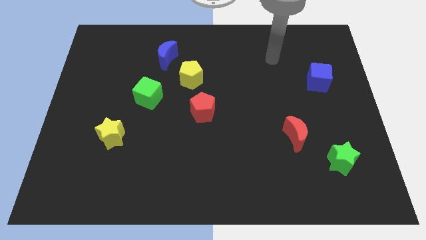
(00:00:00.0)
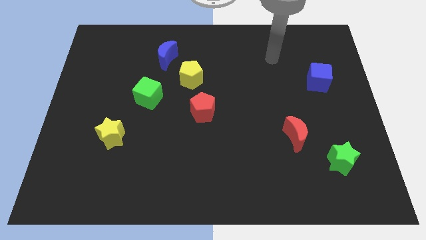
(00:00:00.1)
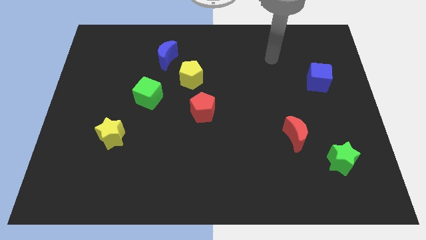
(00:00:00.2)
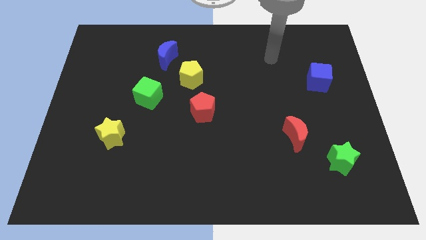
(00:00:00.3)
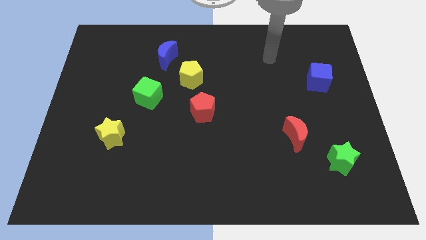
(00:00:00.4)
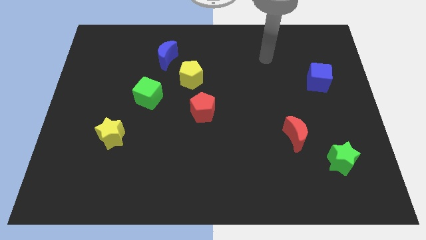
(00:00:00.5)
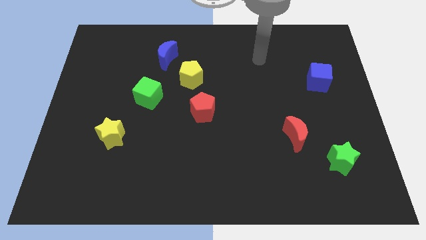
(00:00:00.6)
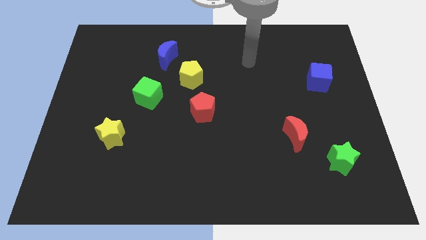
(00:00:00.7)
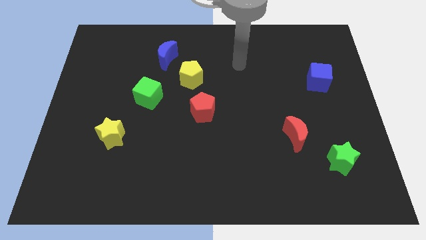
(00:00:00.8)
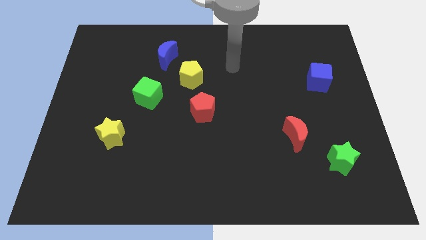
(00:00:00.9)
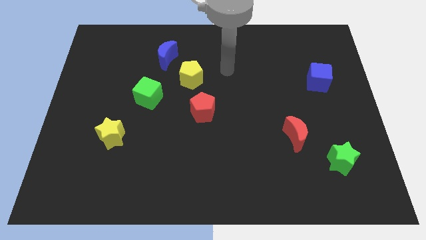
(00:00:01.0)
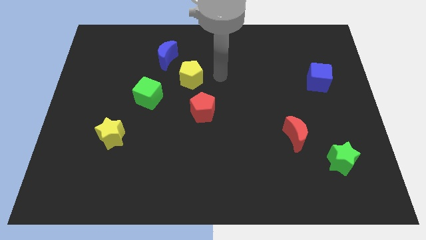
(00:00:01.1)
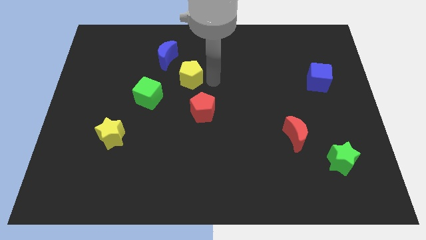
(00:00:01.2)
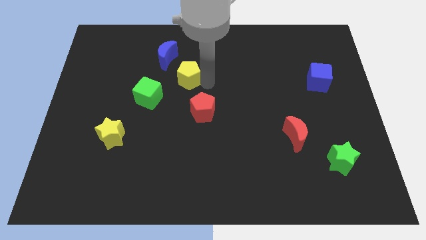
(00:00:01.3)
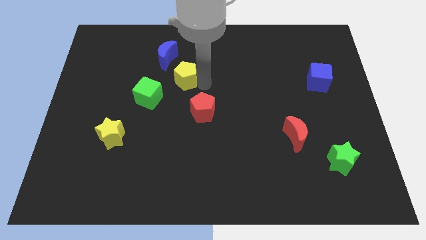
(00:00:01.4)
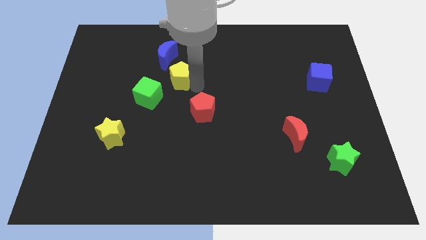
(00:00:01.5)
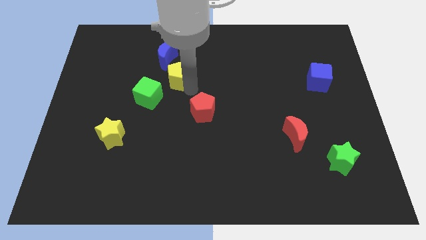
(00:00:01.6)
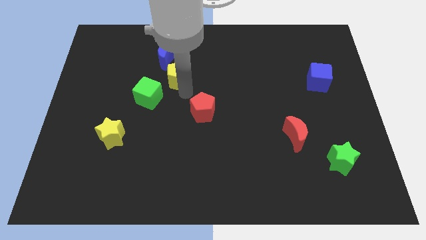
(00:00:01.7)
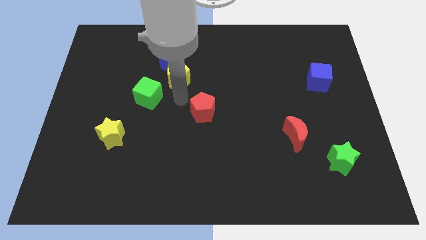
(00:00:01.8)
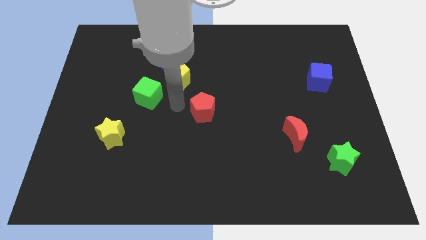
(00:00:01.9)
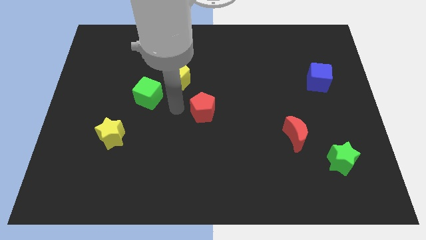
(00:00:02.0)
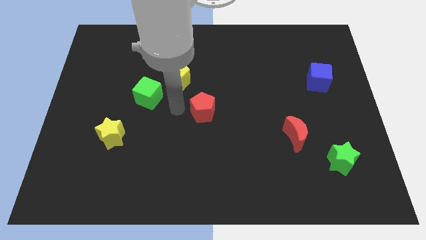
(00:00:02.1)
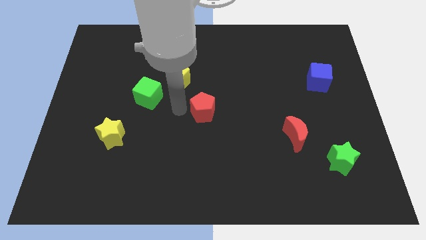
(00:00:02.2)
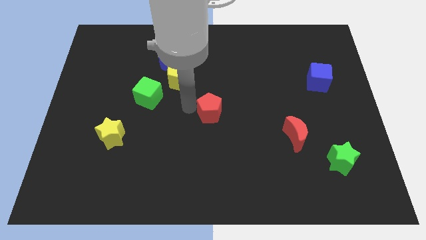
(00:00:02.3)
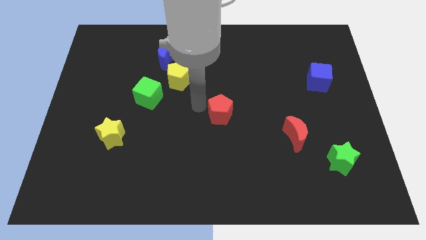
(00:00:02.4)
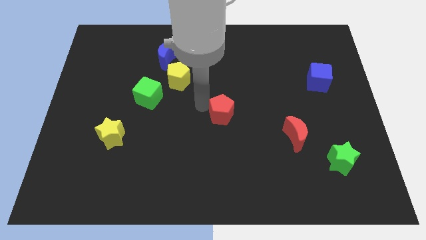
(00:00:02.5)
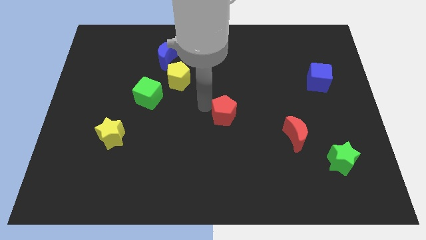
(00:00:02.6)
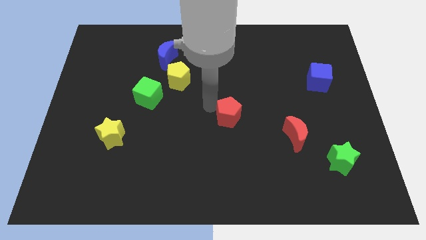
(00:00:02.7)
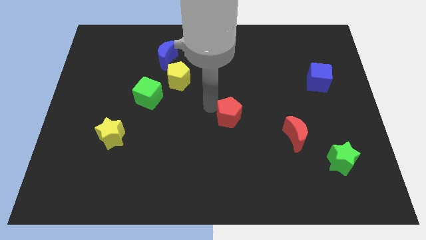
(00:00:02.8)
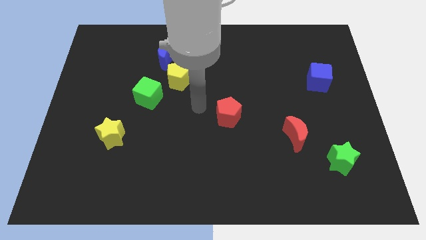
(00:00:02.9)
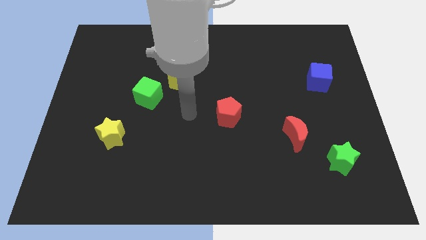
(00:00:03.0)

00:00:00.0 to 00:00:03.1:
slide red and the yellow pentagon diagonal to each other

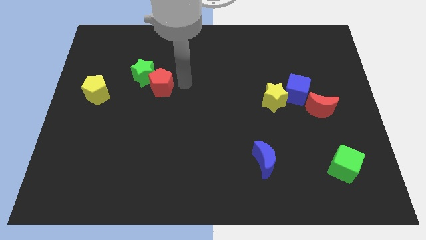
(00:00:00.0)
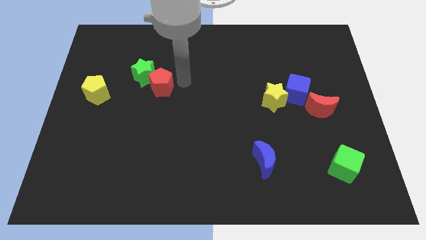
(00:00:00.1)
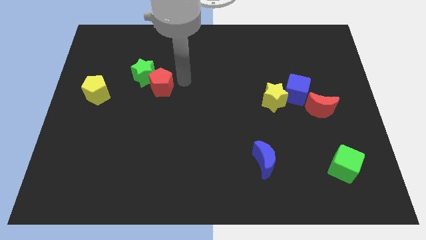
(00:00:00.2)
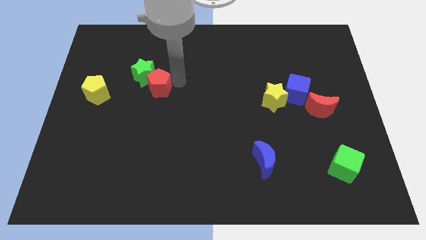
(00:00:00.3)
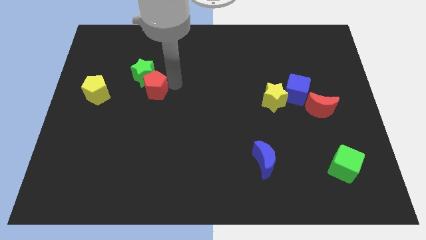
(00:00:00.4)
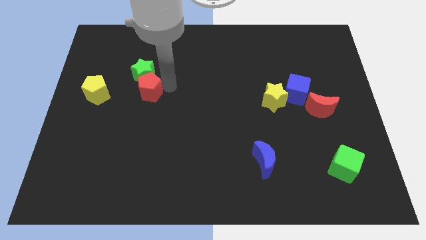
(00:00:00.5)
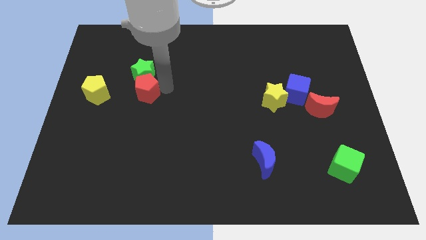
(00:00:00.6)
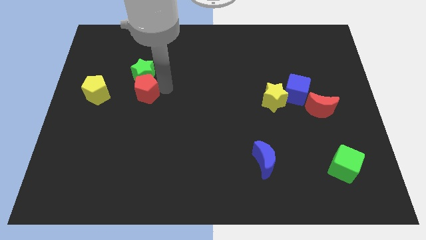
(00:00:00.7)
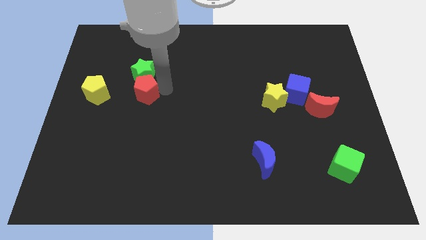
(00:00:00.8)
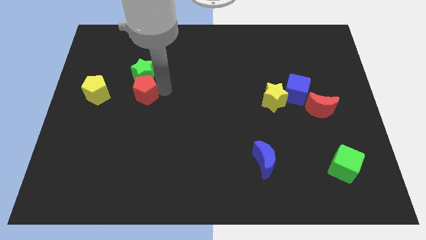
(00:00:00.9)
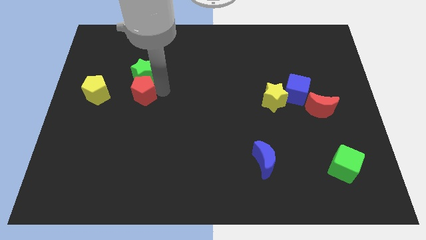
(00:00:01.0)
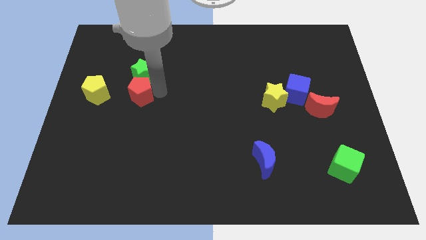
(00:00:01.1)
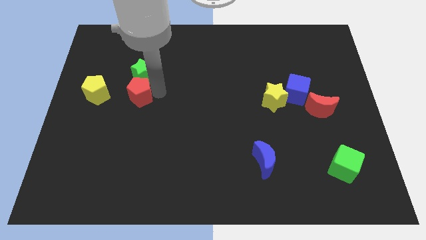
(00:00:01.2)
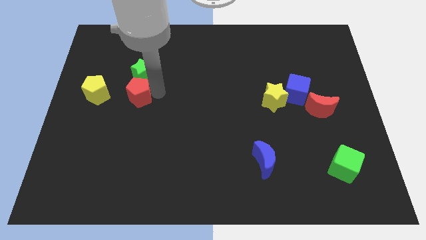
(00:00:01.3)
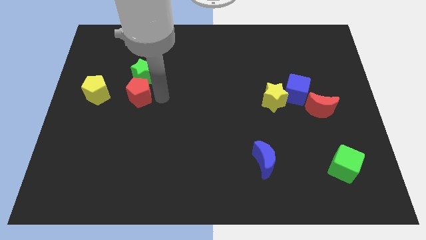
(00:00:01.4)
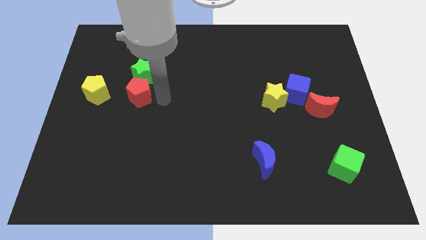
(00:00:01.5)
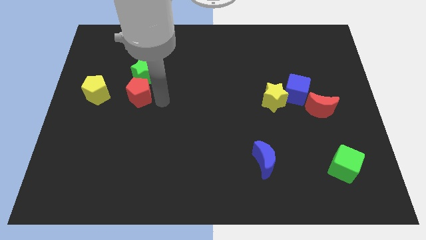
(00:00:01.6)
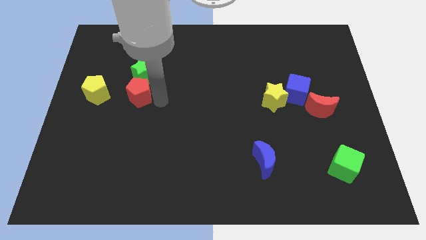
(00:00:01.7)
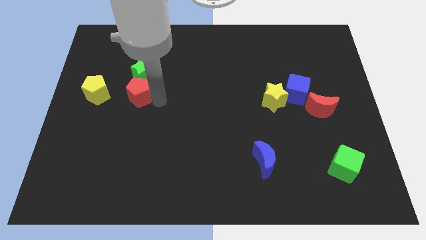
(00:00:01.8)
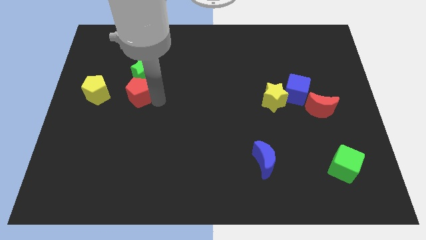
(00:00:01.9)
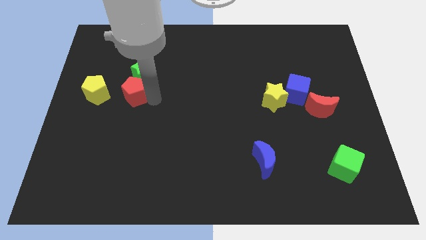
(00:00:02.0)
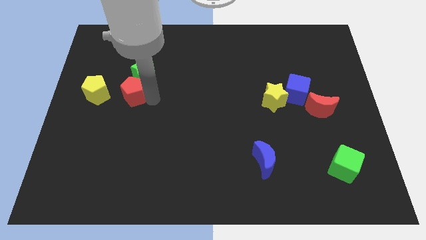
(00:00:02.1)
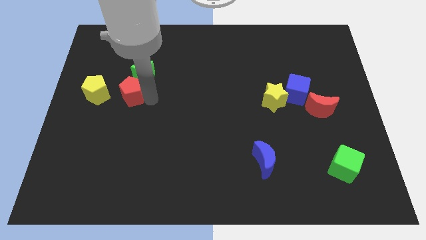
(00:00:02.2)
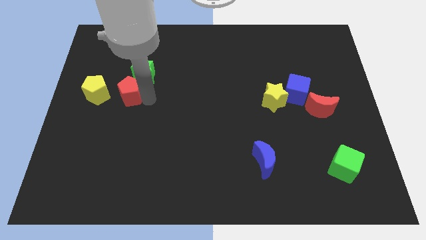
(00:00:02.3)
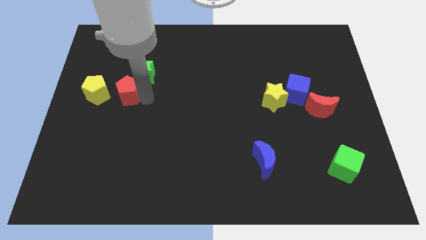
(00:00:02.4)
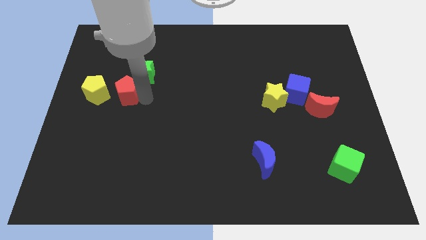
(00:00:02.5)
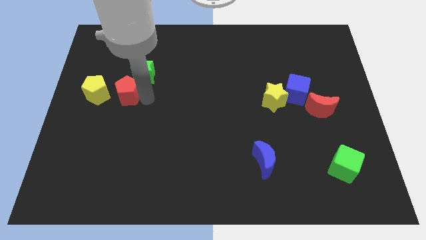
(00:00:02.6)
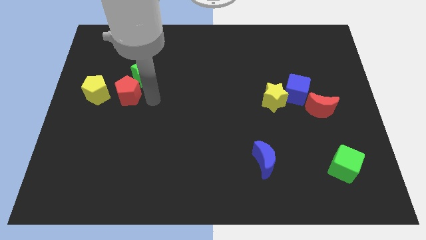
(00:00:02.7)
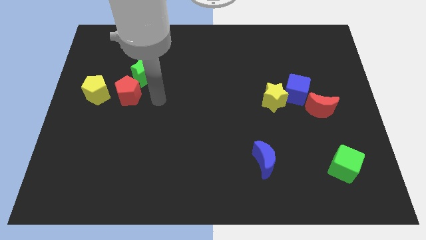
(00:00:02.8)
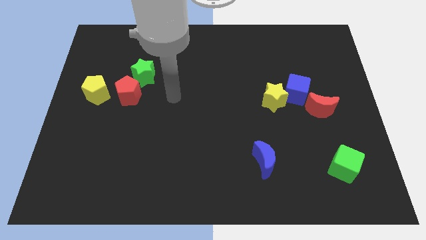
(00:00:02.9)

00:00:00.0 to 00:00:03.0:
place the red pentagon parallel to yellow pentagon

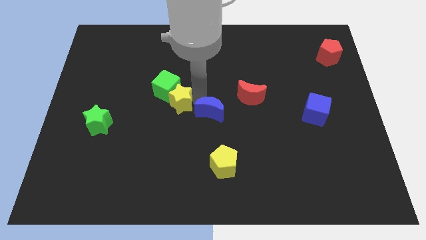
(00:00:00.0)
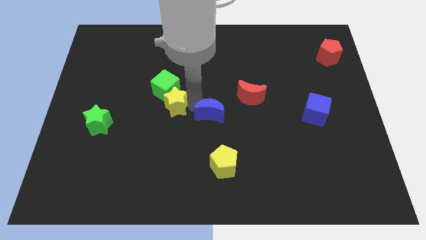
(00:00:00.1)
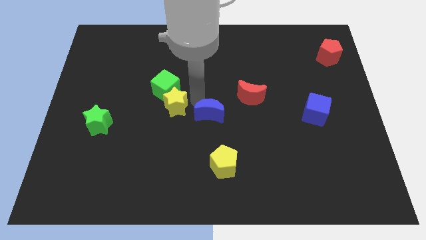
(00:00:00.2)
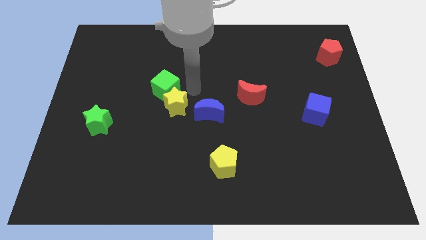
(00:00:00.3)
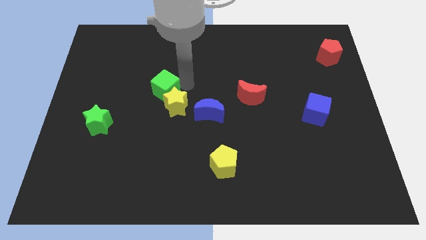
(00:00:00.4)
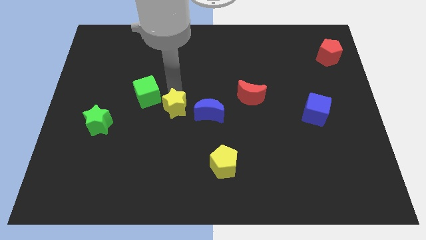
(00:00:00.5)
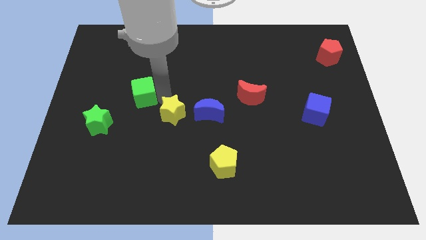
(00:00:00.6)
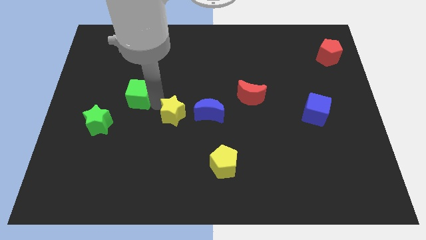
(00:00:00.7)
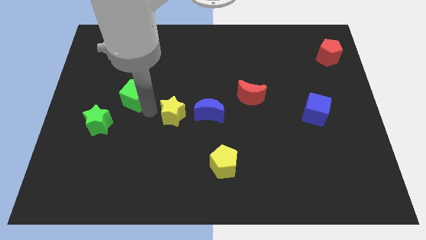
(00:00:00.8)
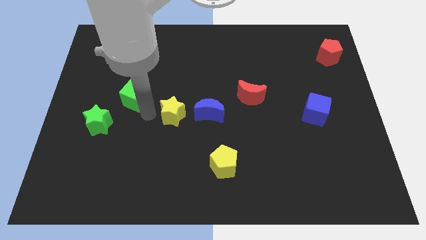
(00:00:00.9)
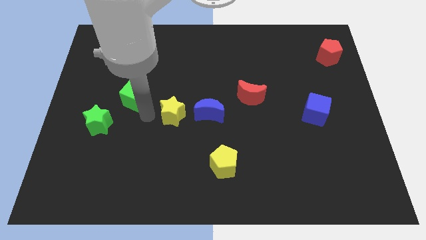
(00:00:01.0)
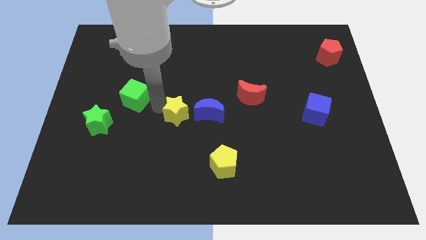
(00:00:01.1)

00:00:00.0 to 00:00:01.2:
separate the yellow star from the green cube

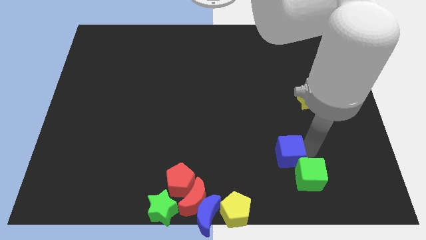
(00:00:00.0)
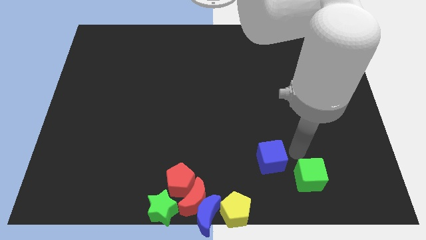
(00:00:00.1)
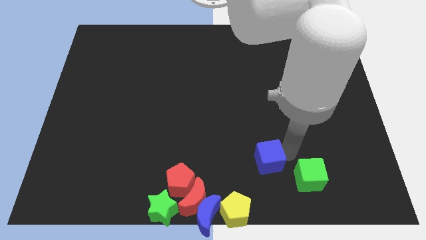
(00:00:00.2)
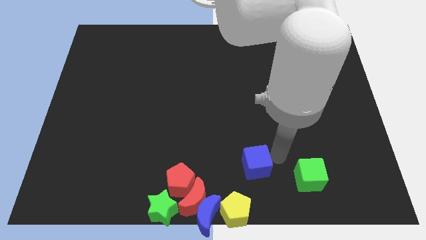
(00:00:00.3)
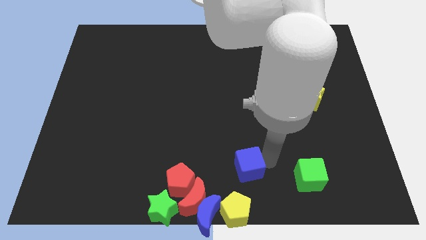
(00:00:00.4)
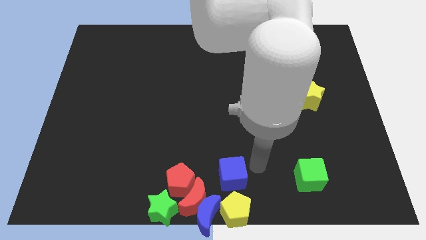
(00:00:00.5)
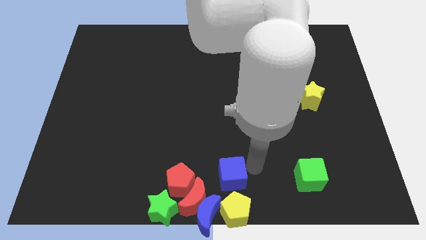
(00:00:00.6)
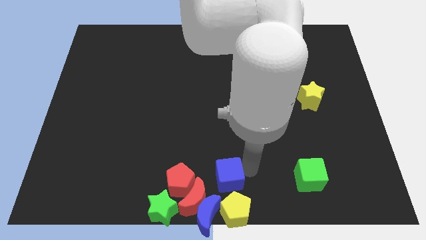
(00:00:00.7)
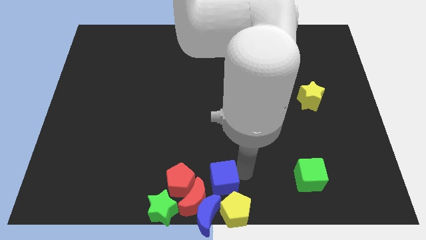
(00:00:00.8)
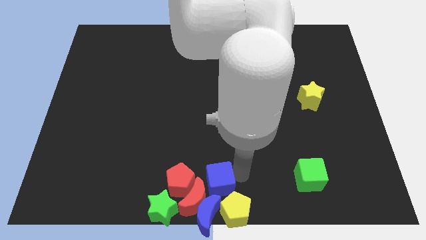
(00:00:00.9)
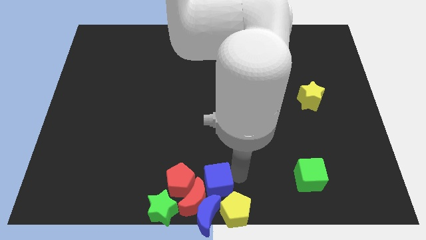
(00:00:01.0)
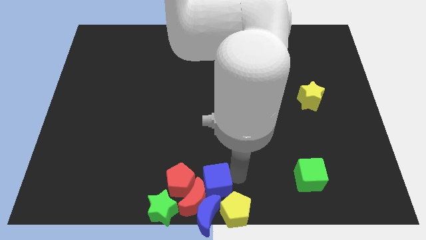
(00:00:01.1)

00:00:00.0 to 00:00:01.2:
move the blue cube towards the red crescent

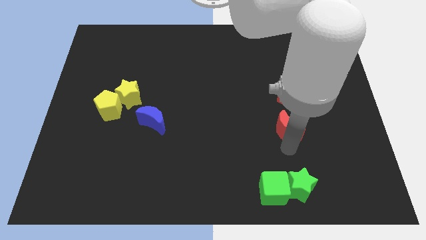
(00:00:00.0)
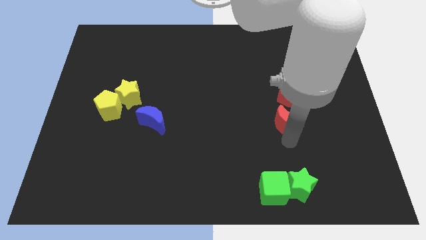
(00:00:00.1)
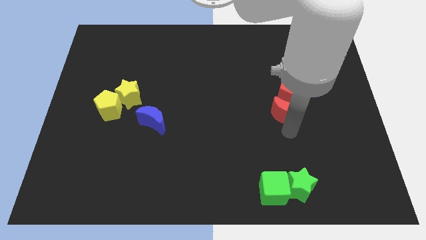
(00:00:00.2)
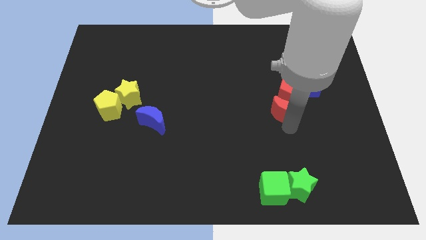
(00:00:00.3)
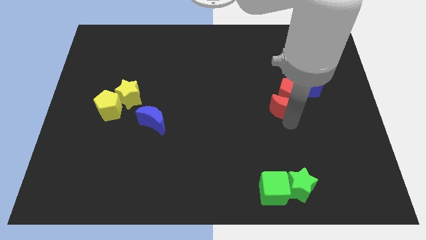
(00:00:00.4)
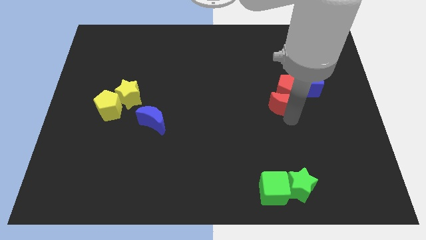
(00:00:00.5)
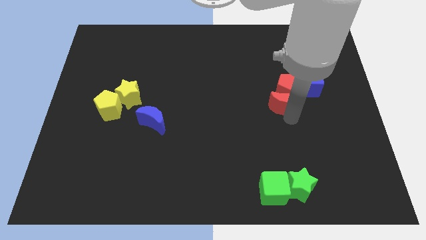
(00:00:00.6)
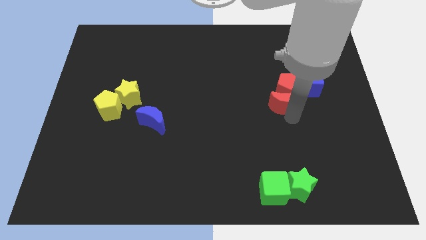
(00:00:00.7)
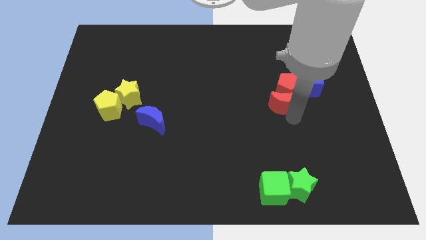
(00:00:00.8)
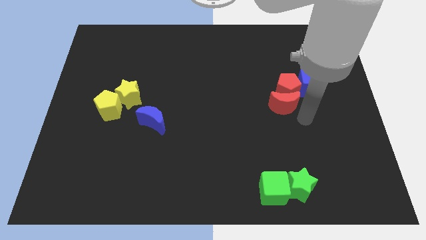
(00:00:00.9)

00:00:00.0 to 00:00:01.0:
push the red crescent into the red pentagon
